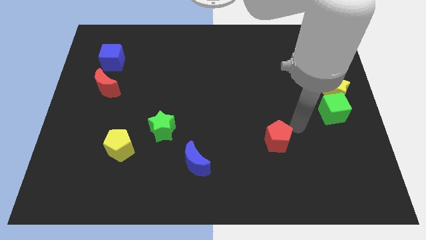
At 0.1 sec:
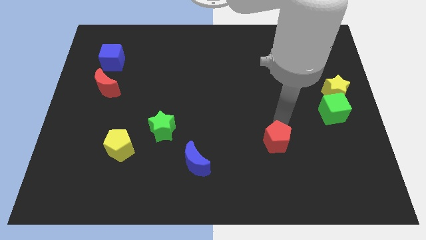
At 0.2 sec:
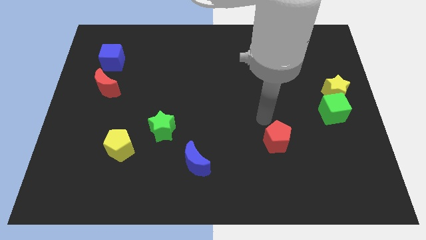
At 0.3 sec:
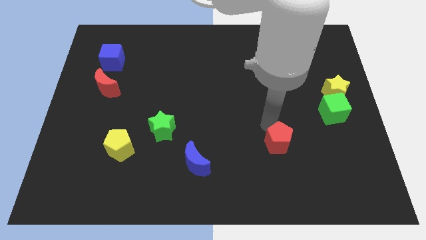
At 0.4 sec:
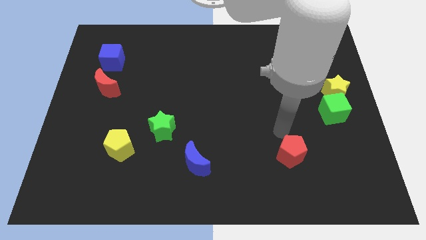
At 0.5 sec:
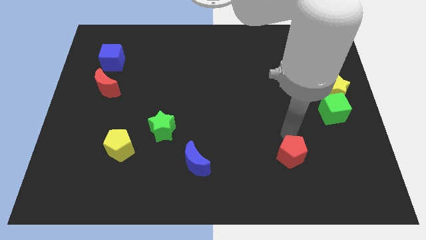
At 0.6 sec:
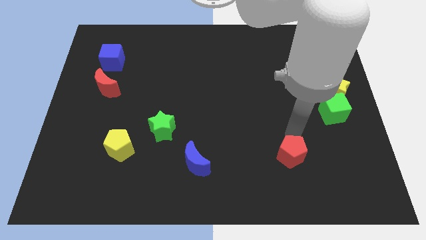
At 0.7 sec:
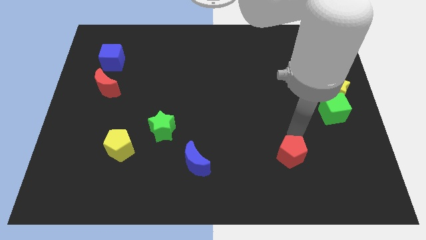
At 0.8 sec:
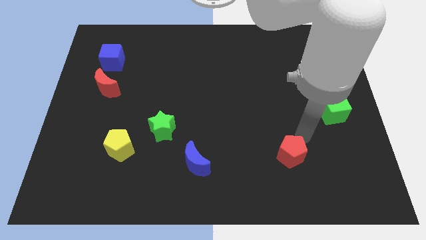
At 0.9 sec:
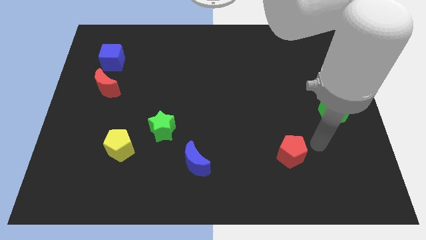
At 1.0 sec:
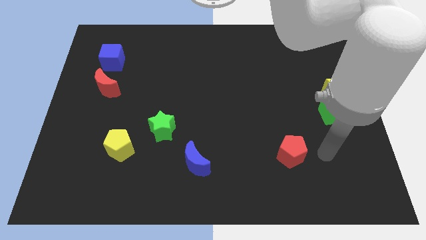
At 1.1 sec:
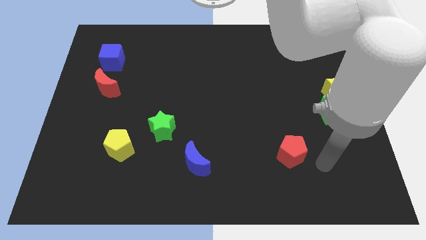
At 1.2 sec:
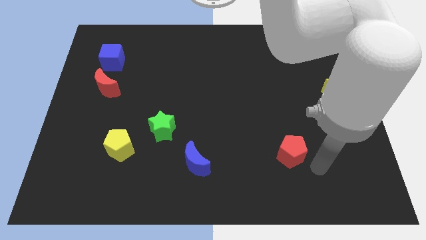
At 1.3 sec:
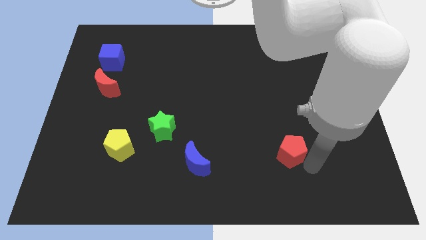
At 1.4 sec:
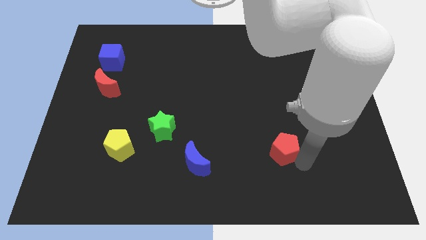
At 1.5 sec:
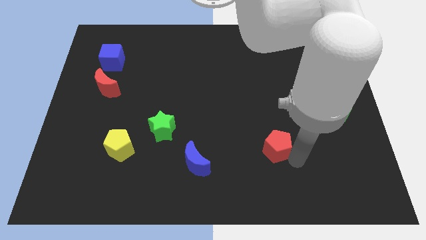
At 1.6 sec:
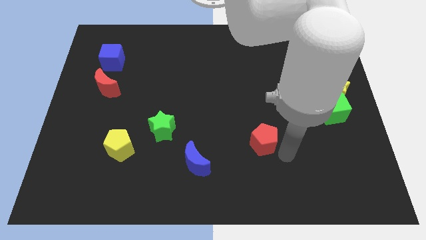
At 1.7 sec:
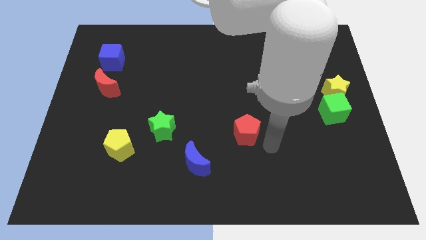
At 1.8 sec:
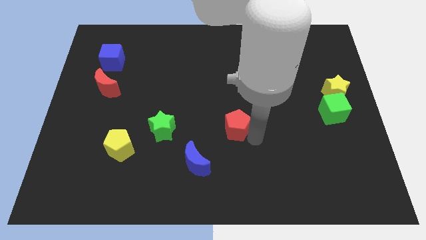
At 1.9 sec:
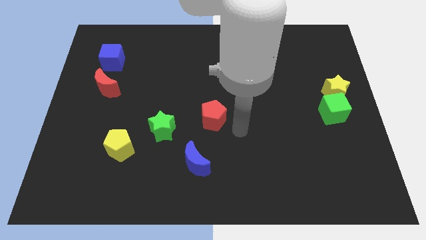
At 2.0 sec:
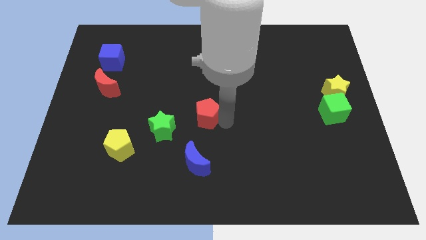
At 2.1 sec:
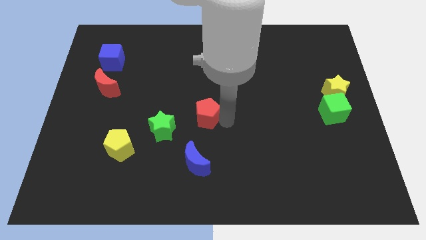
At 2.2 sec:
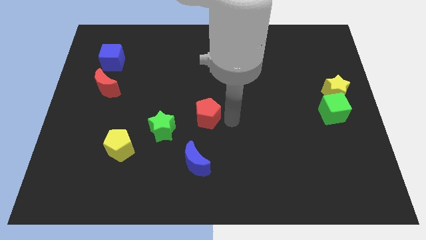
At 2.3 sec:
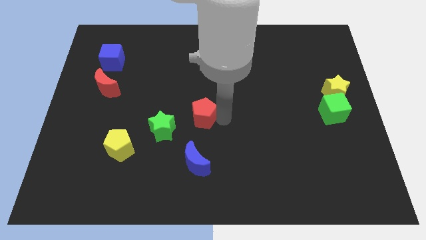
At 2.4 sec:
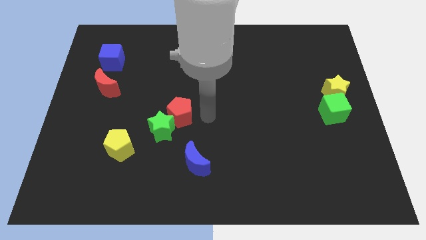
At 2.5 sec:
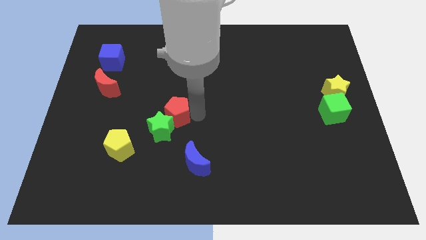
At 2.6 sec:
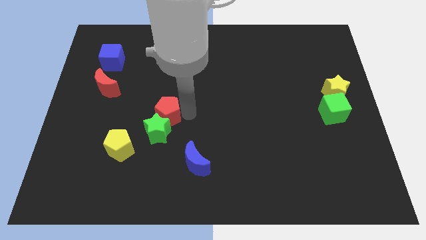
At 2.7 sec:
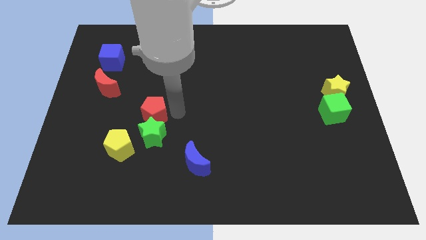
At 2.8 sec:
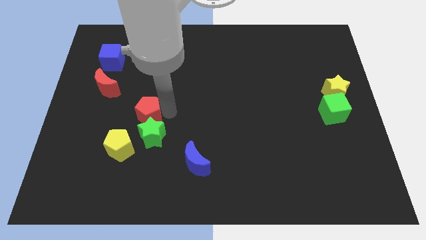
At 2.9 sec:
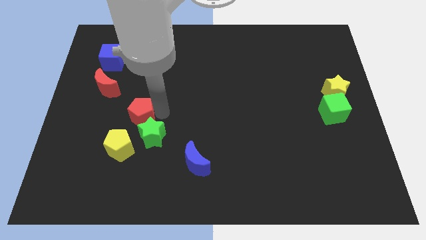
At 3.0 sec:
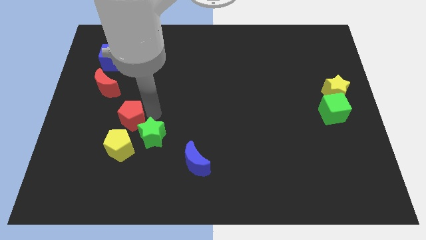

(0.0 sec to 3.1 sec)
push red pentagon into the green star

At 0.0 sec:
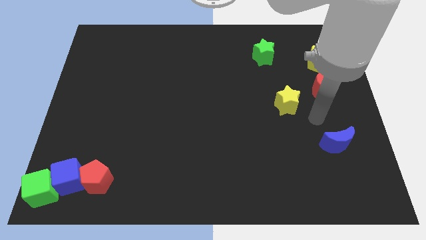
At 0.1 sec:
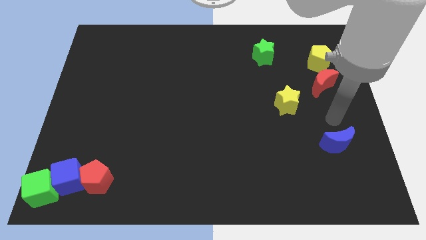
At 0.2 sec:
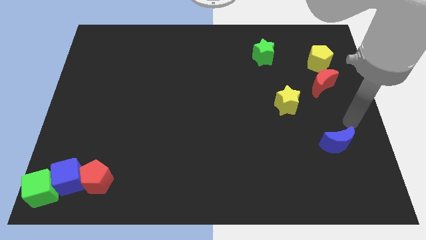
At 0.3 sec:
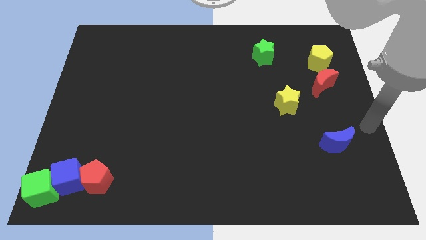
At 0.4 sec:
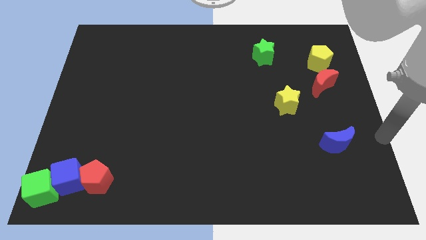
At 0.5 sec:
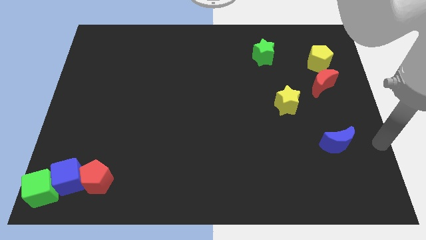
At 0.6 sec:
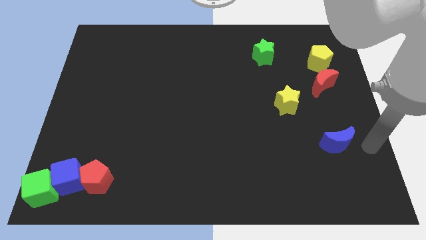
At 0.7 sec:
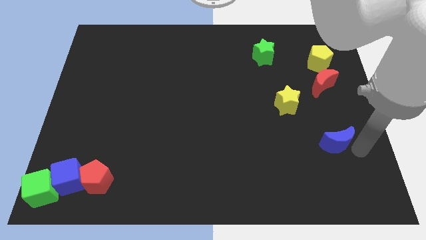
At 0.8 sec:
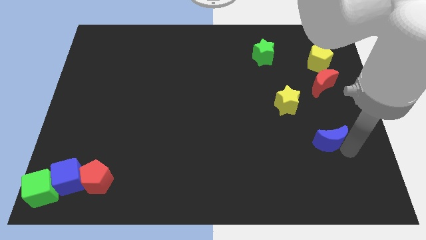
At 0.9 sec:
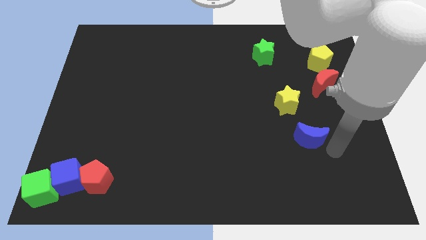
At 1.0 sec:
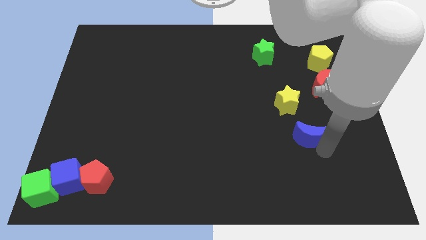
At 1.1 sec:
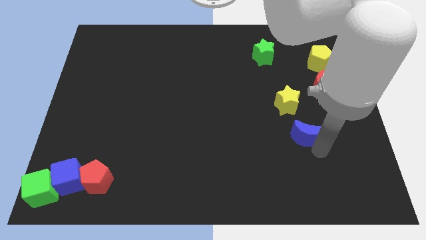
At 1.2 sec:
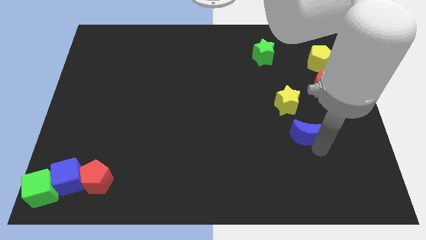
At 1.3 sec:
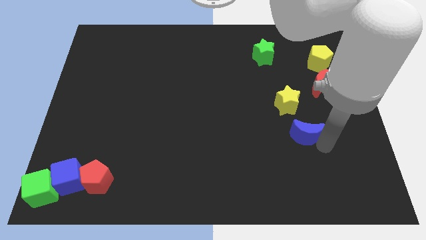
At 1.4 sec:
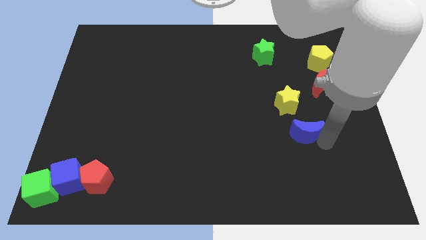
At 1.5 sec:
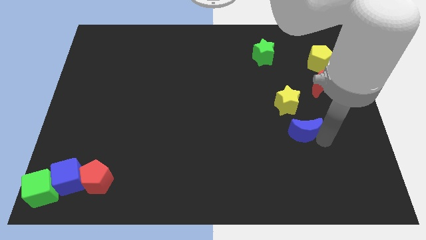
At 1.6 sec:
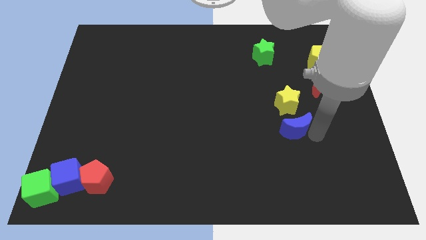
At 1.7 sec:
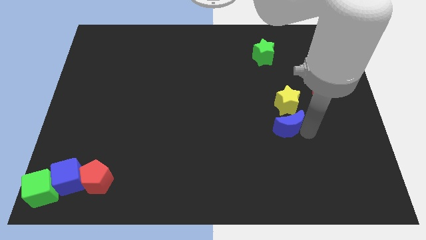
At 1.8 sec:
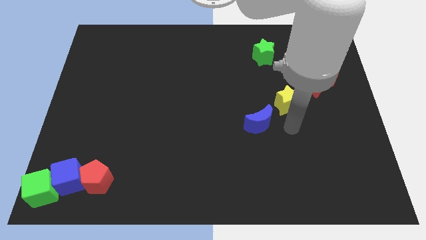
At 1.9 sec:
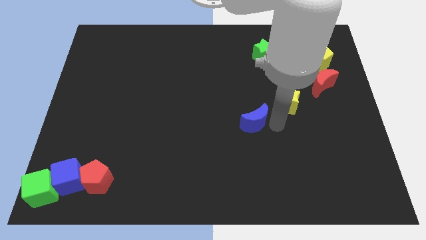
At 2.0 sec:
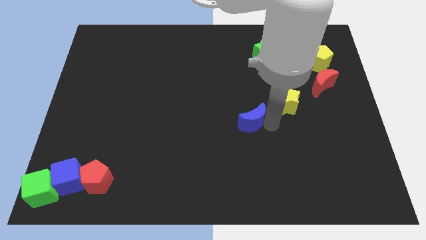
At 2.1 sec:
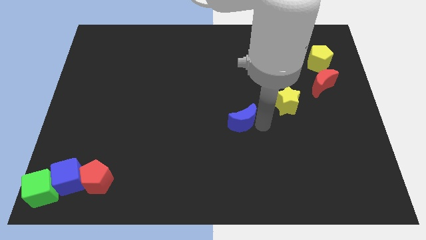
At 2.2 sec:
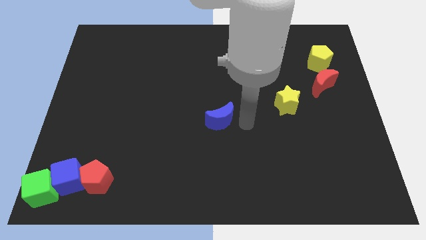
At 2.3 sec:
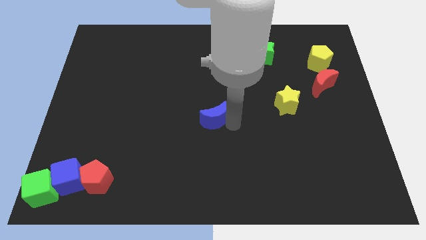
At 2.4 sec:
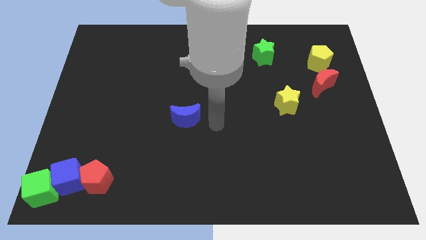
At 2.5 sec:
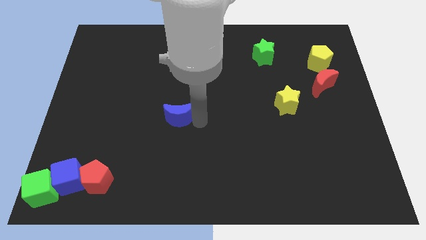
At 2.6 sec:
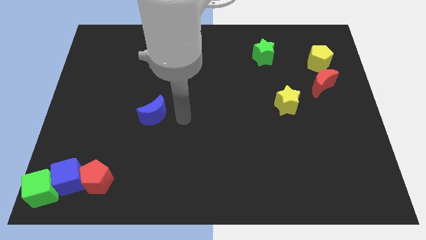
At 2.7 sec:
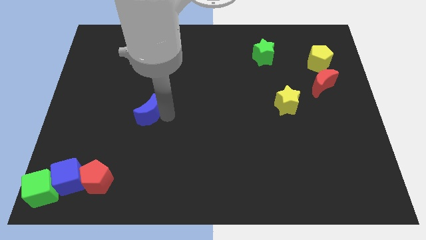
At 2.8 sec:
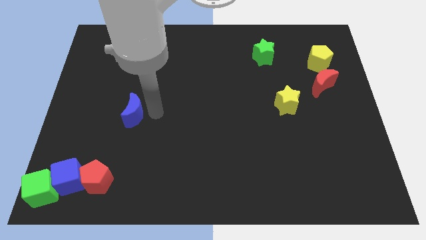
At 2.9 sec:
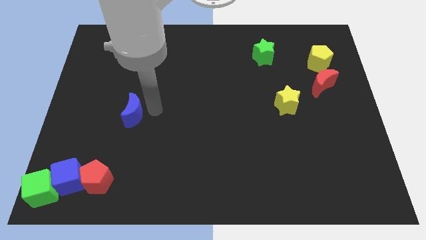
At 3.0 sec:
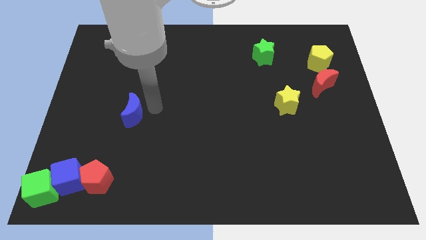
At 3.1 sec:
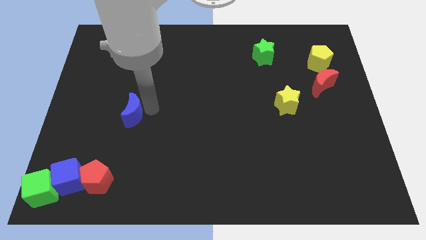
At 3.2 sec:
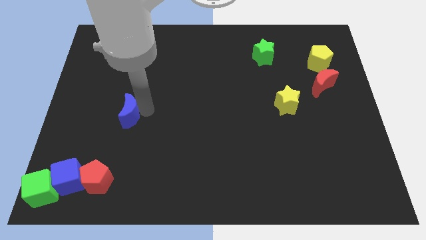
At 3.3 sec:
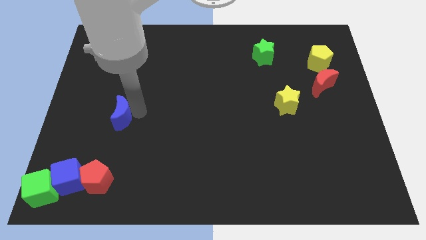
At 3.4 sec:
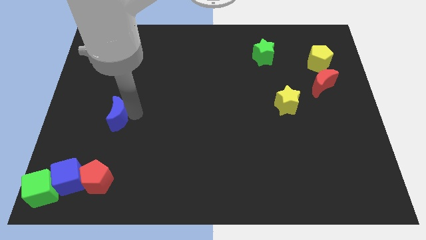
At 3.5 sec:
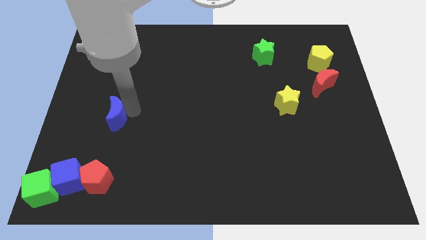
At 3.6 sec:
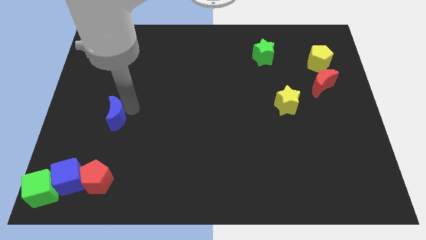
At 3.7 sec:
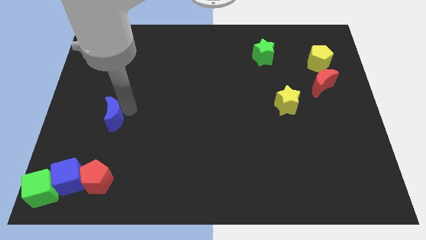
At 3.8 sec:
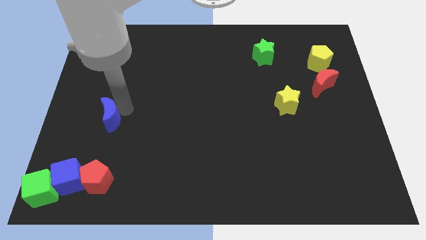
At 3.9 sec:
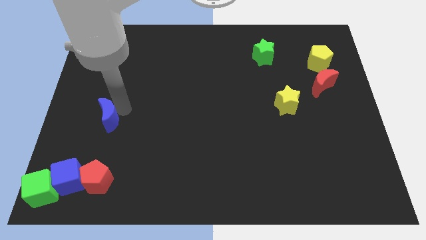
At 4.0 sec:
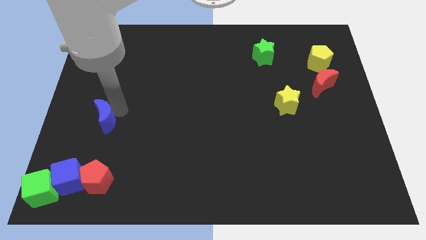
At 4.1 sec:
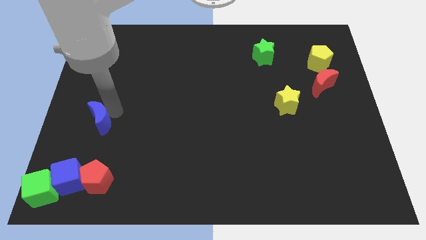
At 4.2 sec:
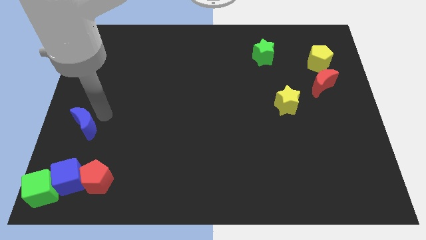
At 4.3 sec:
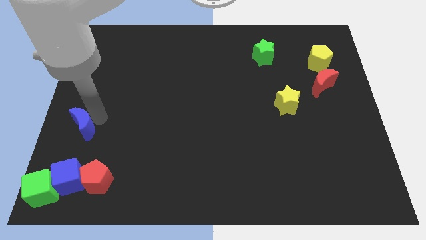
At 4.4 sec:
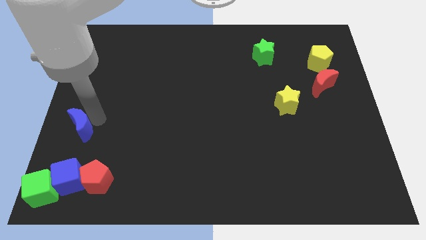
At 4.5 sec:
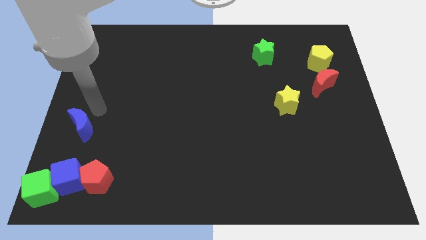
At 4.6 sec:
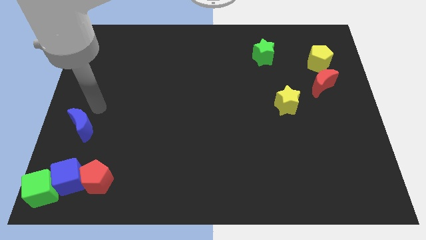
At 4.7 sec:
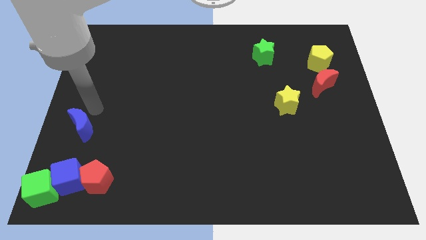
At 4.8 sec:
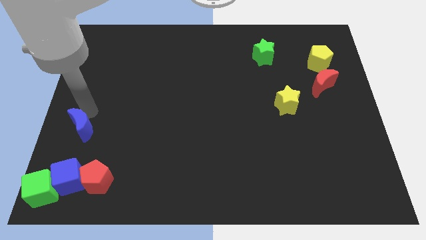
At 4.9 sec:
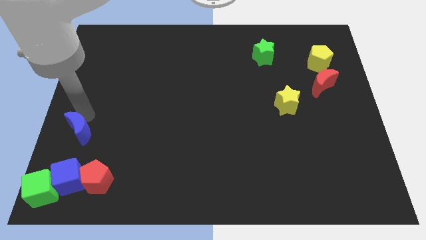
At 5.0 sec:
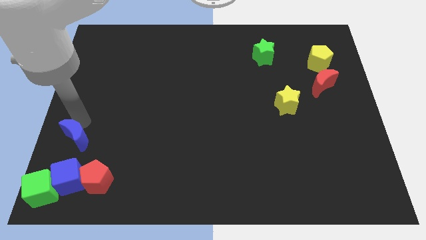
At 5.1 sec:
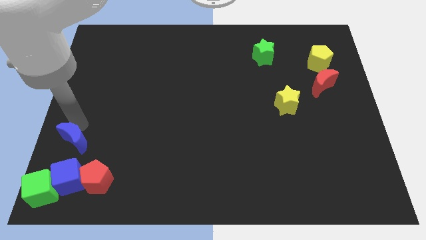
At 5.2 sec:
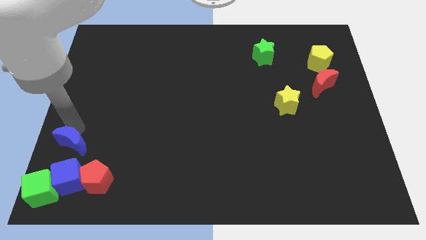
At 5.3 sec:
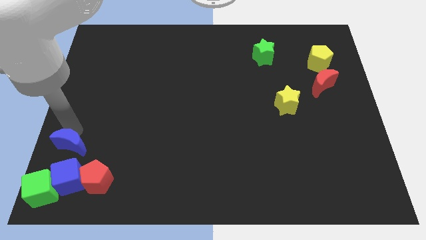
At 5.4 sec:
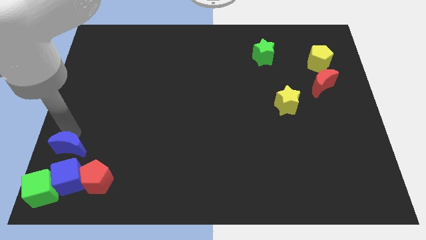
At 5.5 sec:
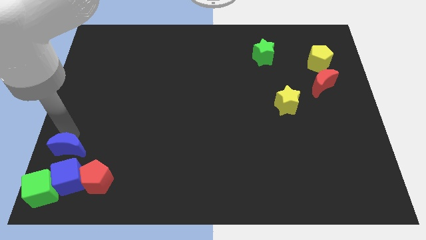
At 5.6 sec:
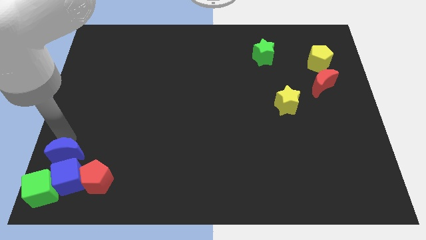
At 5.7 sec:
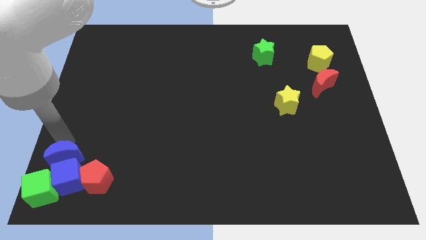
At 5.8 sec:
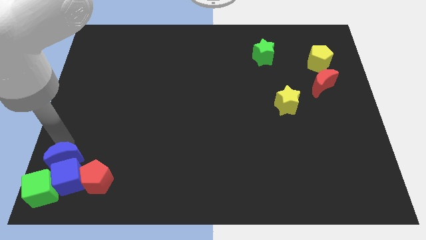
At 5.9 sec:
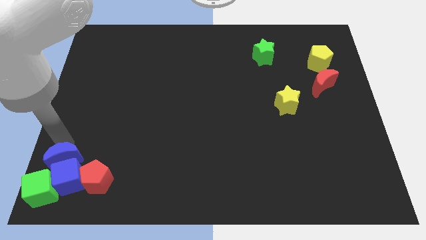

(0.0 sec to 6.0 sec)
move the blue moon above the blue cube
